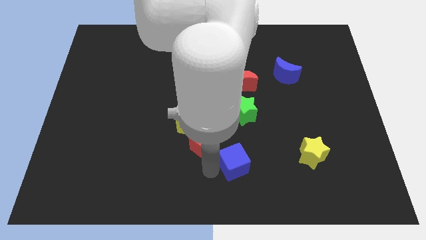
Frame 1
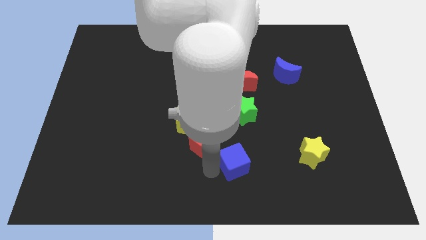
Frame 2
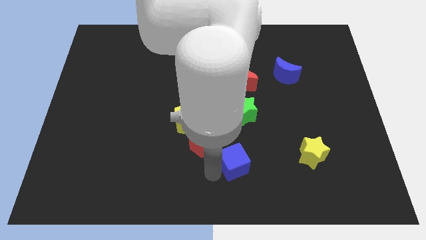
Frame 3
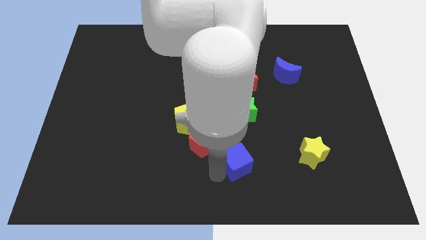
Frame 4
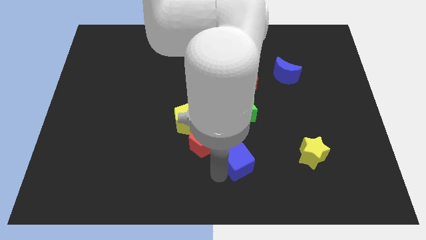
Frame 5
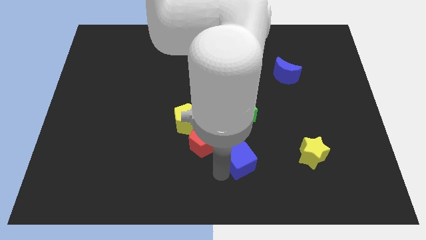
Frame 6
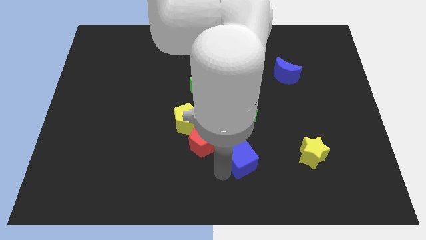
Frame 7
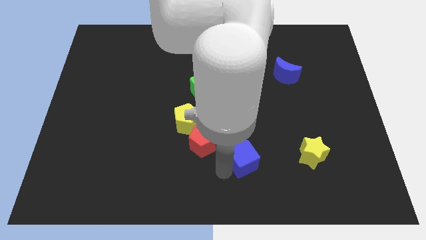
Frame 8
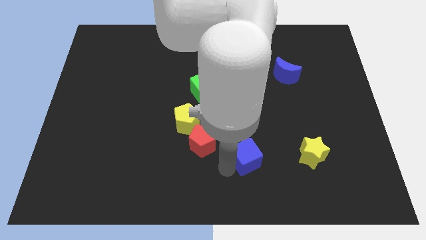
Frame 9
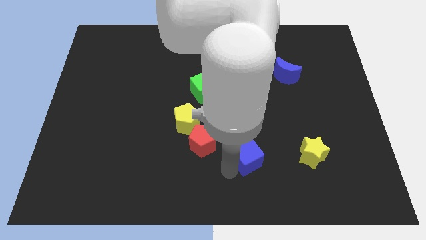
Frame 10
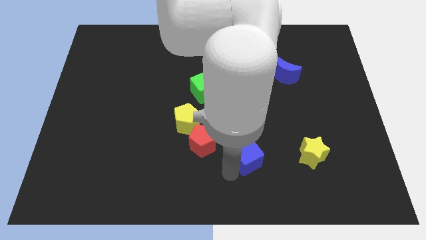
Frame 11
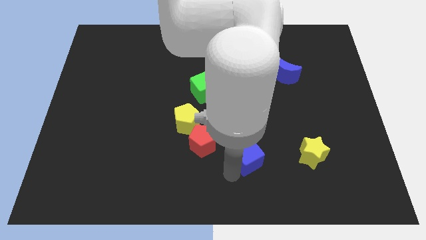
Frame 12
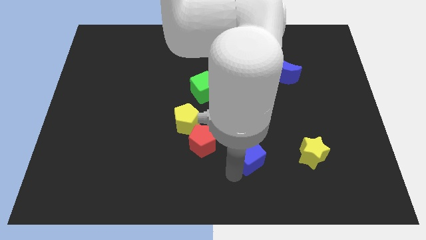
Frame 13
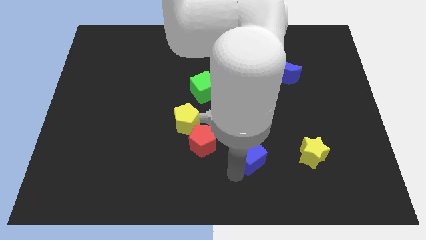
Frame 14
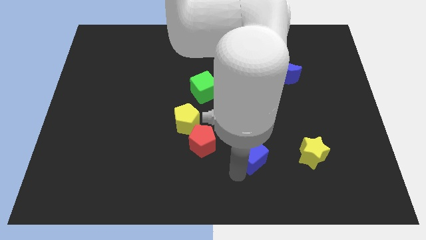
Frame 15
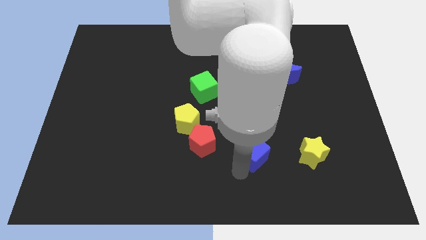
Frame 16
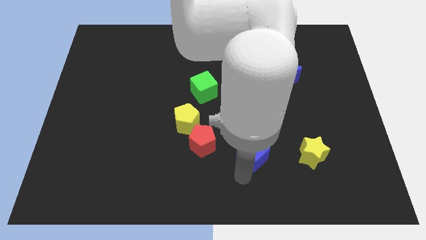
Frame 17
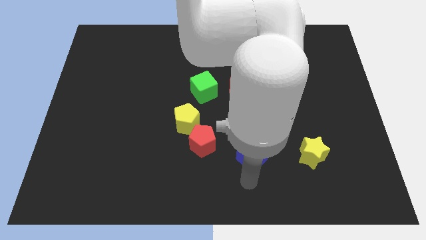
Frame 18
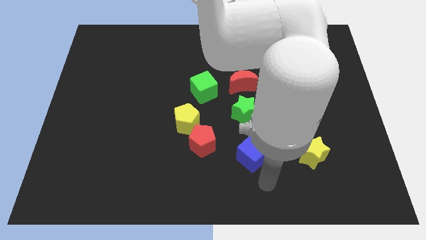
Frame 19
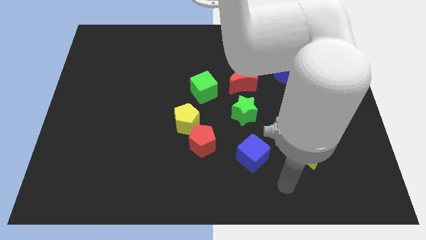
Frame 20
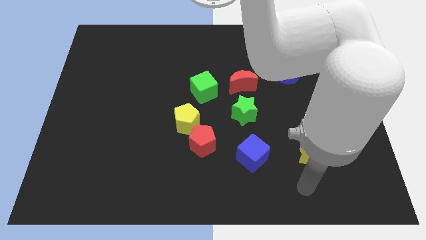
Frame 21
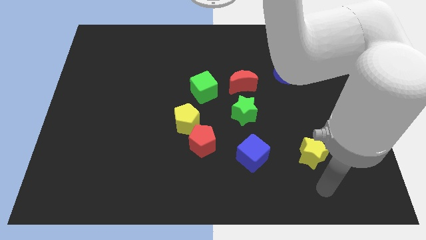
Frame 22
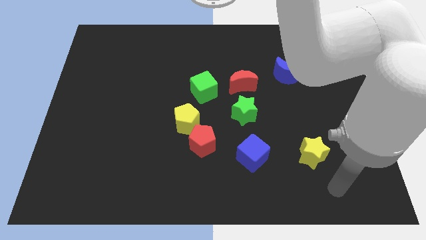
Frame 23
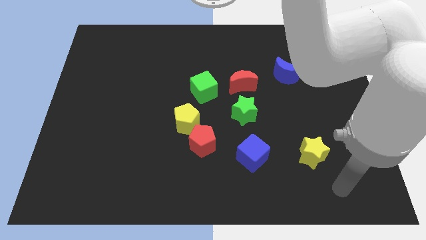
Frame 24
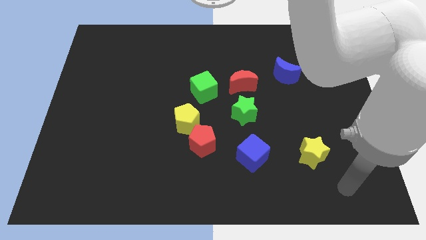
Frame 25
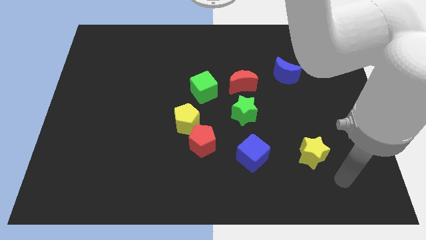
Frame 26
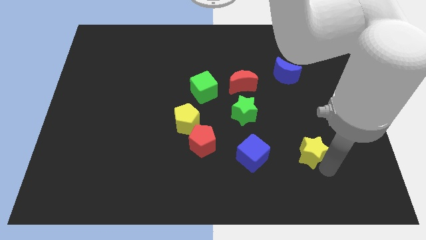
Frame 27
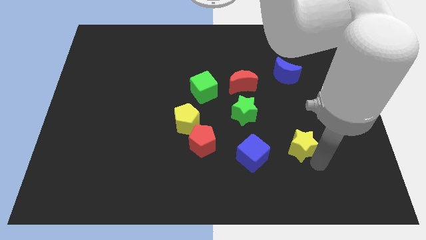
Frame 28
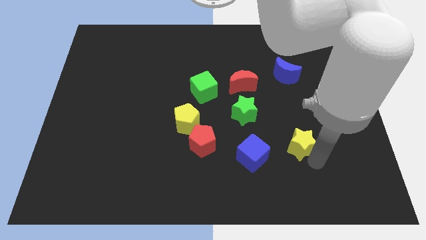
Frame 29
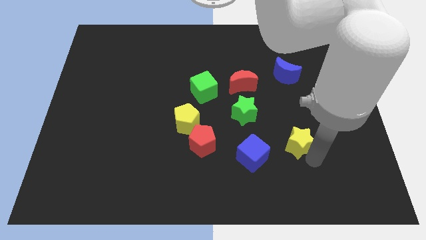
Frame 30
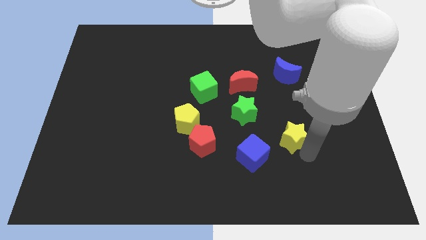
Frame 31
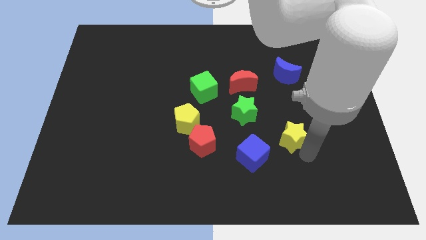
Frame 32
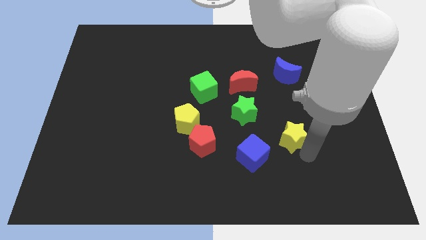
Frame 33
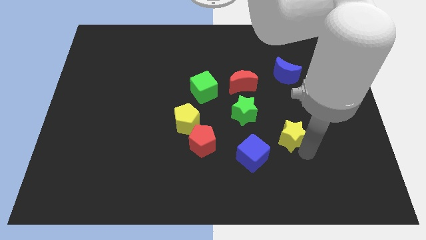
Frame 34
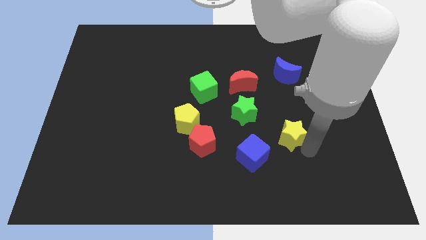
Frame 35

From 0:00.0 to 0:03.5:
place the yellow star diagonally top right to the blue cube

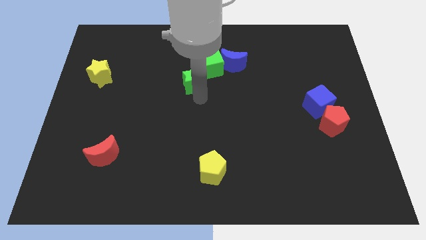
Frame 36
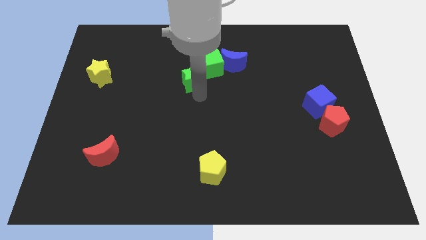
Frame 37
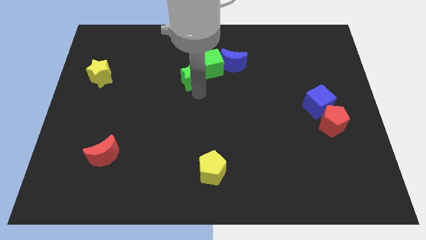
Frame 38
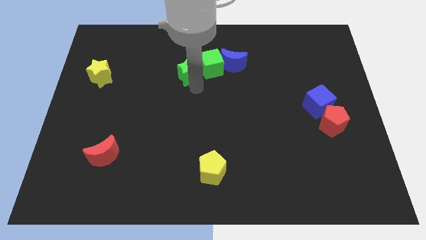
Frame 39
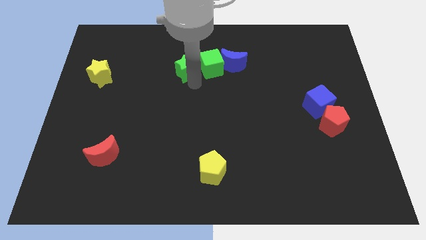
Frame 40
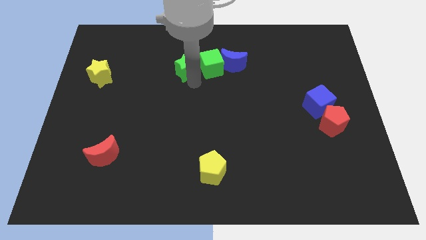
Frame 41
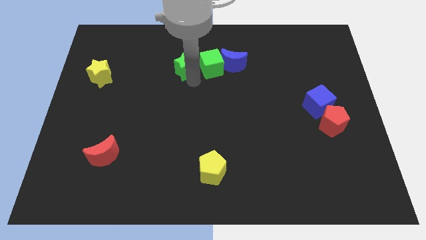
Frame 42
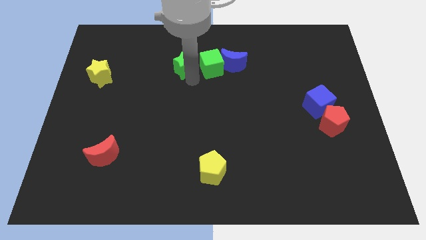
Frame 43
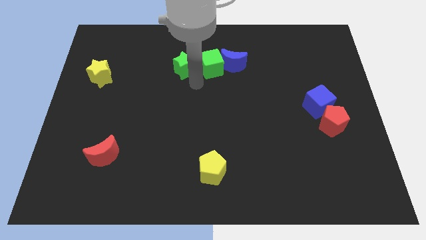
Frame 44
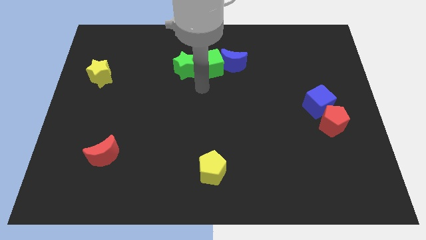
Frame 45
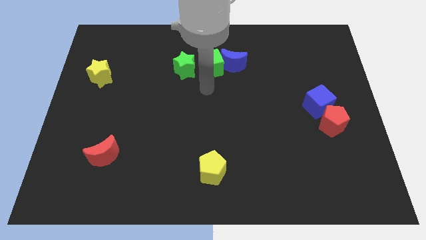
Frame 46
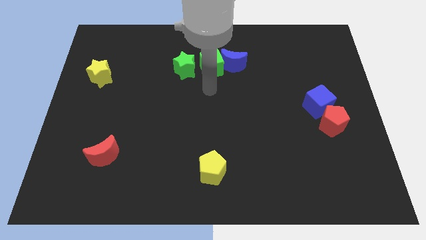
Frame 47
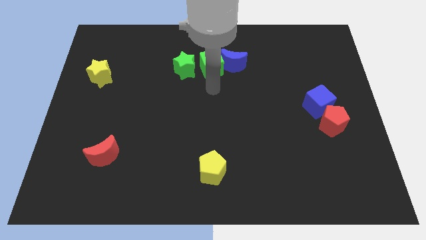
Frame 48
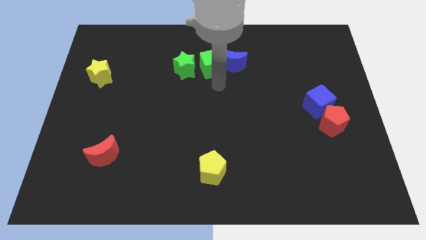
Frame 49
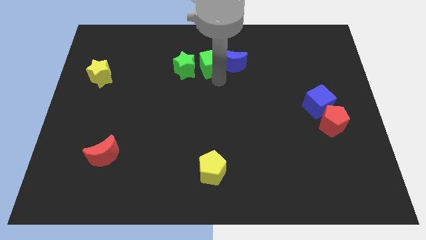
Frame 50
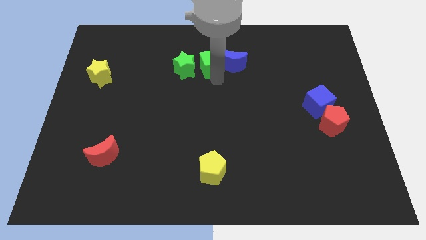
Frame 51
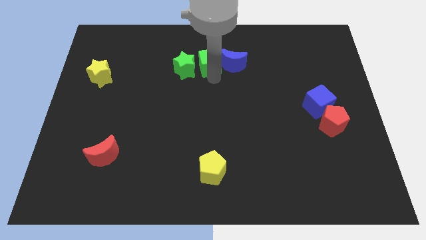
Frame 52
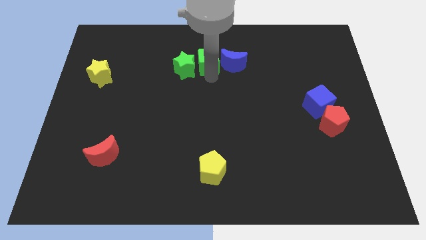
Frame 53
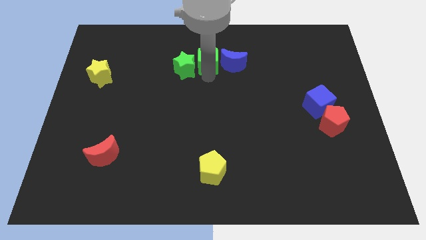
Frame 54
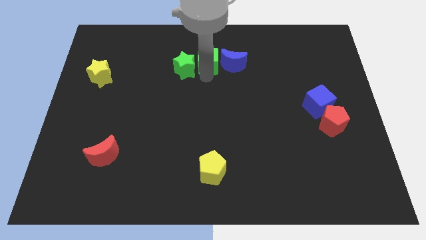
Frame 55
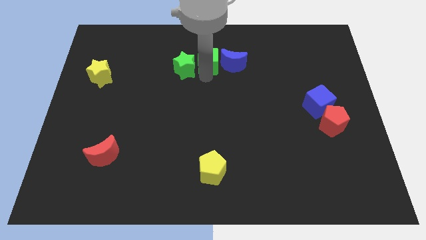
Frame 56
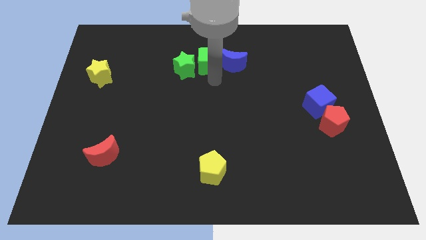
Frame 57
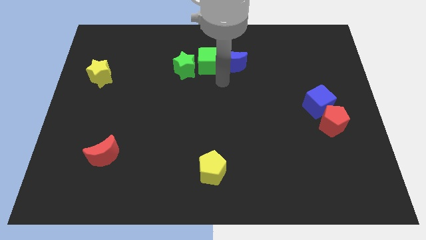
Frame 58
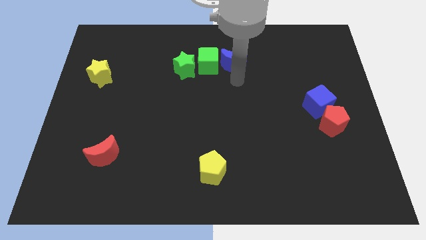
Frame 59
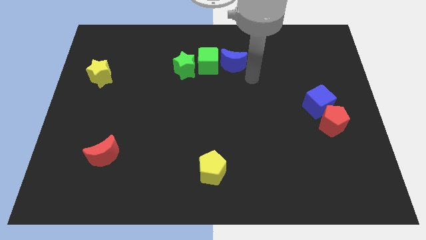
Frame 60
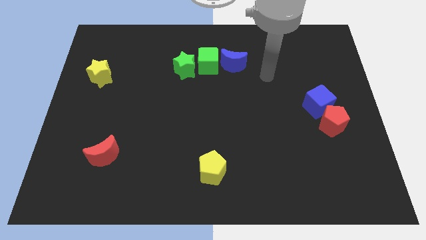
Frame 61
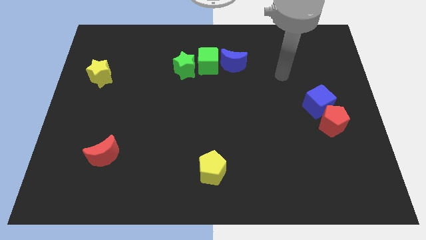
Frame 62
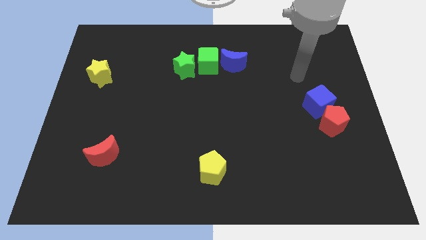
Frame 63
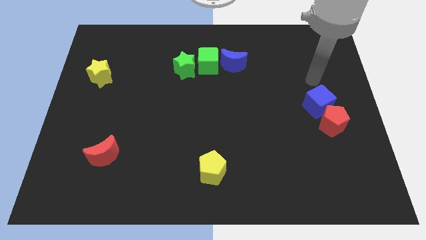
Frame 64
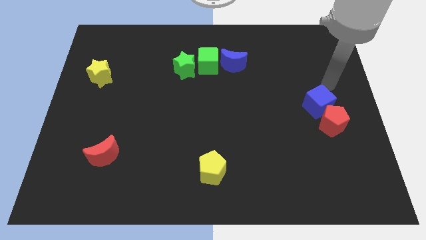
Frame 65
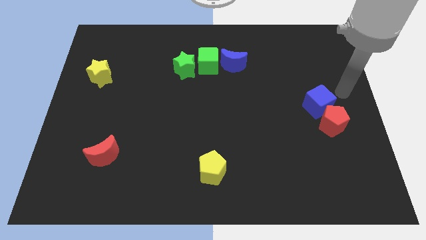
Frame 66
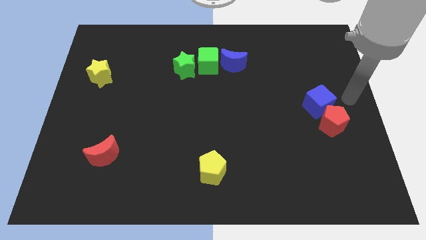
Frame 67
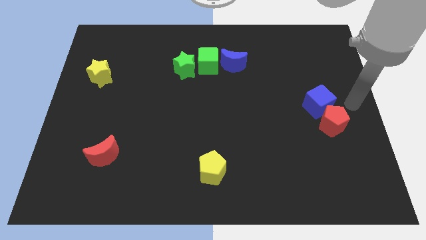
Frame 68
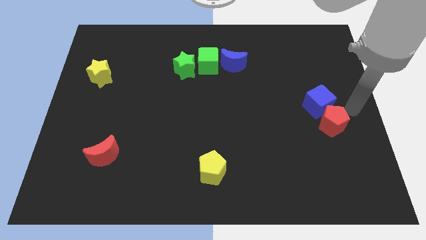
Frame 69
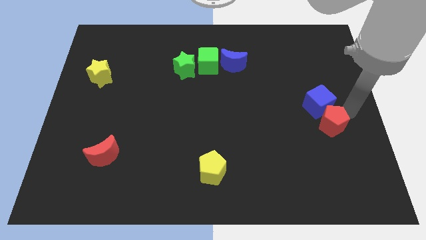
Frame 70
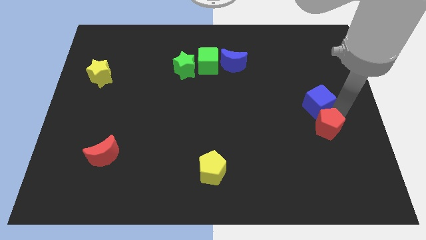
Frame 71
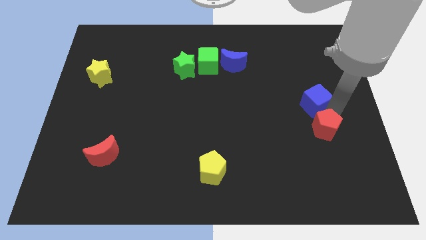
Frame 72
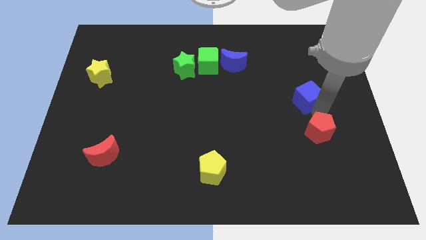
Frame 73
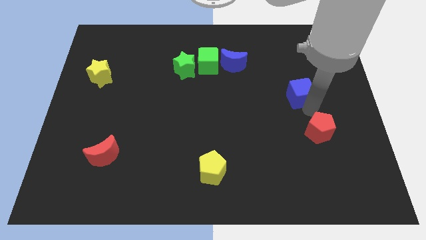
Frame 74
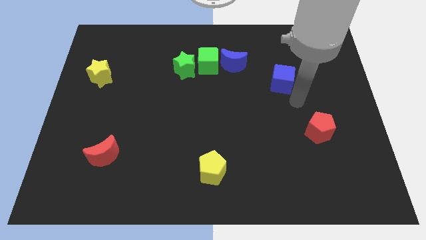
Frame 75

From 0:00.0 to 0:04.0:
place the blue cube diagonal to the yellow pentagon

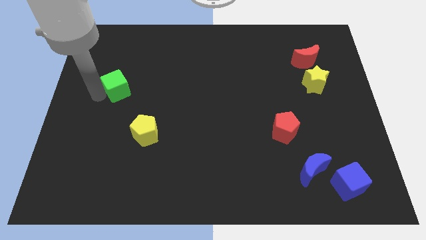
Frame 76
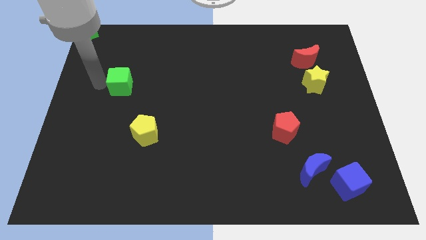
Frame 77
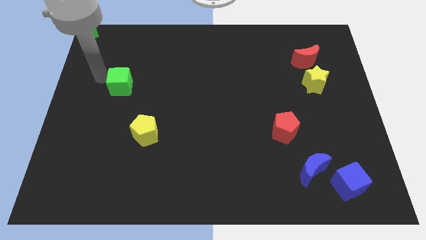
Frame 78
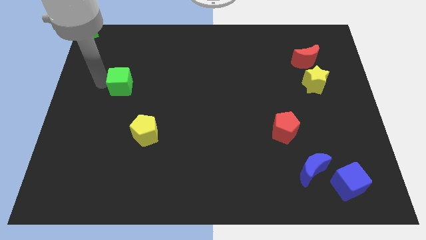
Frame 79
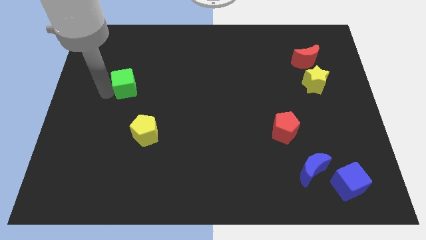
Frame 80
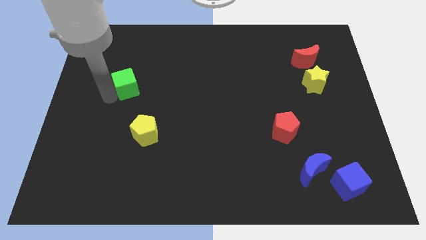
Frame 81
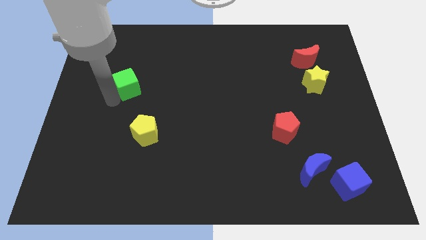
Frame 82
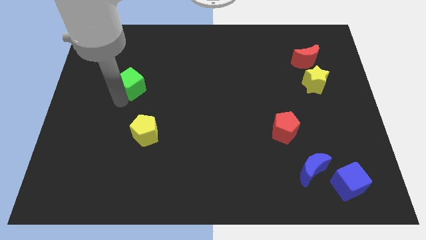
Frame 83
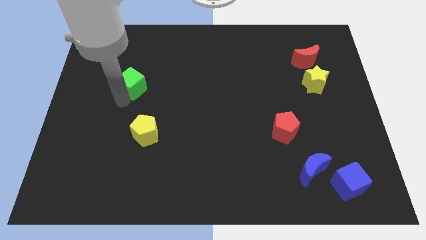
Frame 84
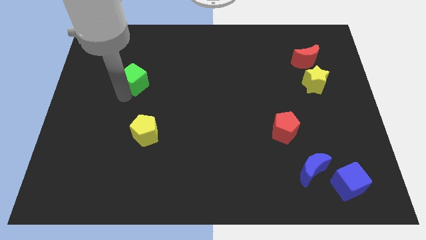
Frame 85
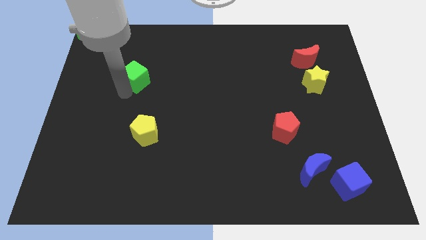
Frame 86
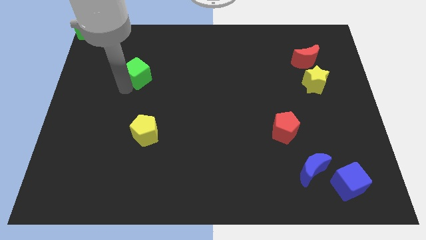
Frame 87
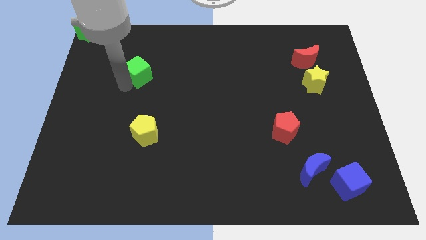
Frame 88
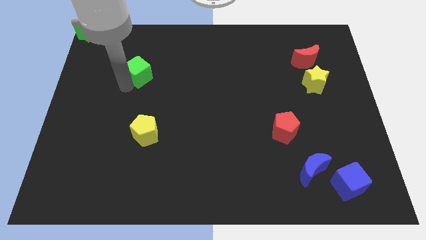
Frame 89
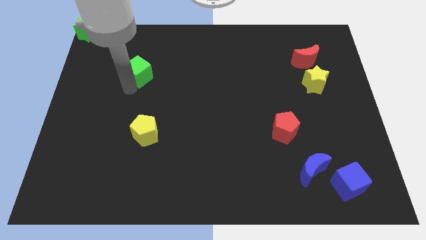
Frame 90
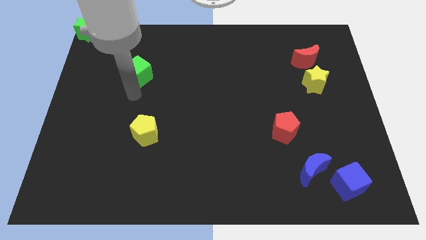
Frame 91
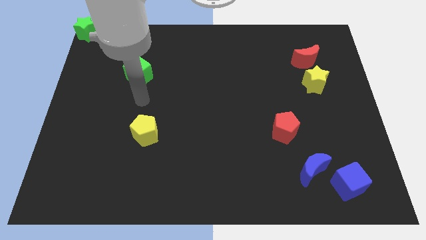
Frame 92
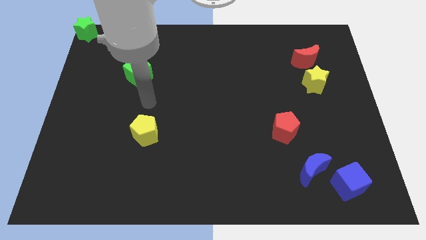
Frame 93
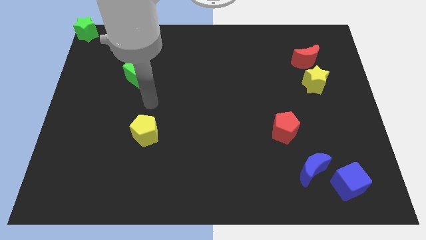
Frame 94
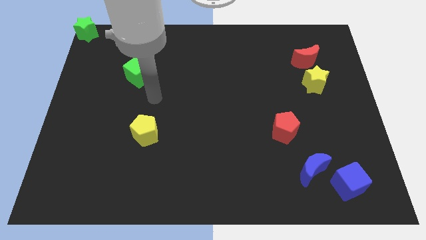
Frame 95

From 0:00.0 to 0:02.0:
place the green cube vertically above the yellow pentagon
